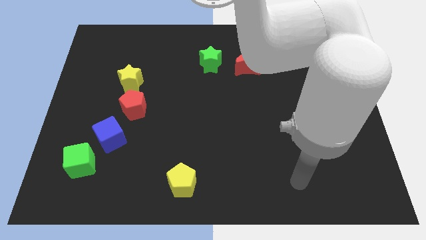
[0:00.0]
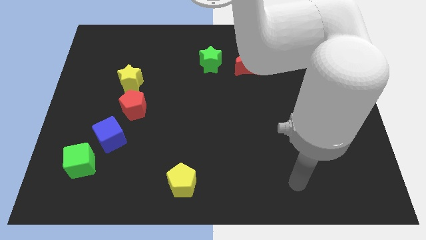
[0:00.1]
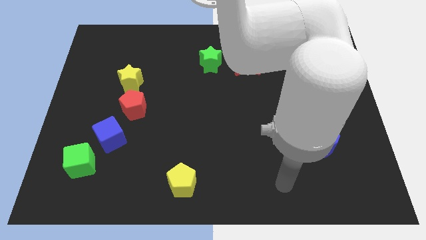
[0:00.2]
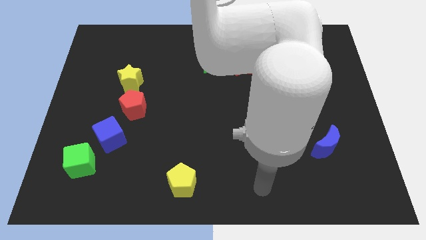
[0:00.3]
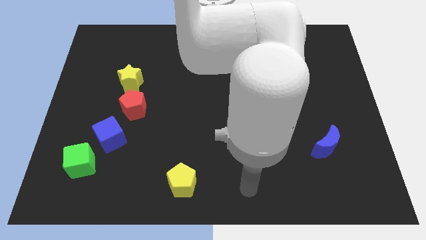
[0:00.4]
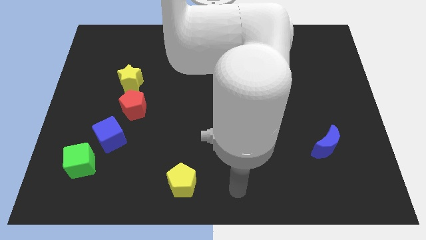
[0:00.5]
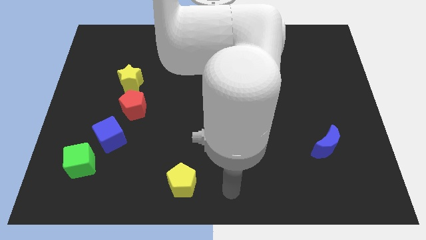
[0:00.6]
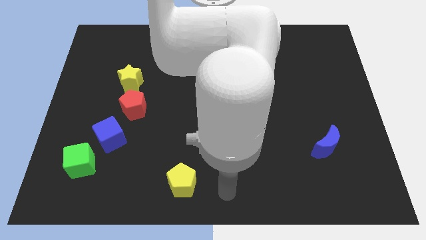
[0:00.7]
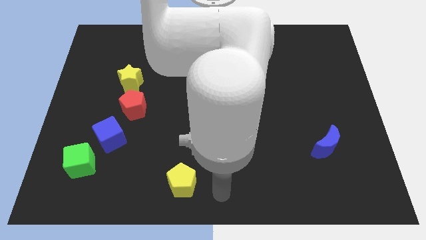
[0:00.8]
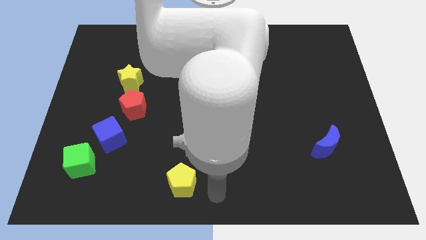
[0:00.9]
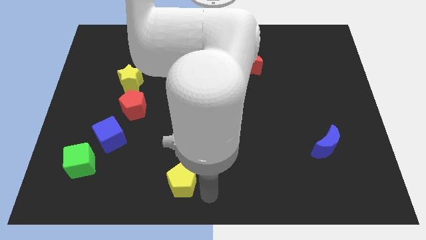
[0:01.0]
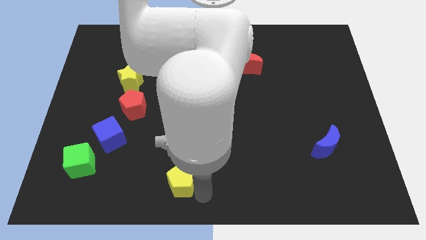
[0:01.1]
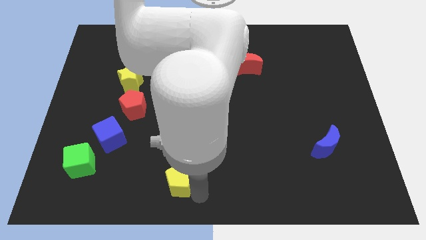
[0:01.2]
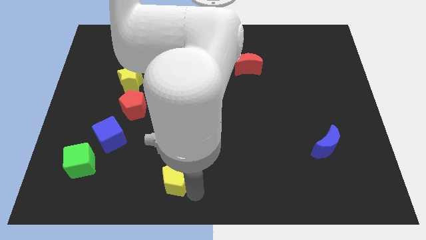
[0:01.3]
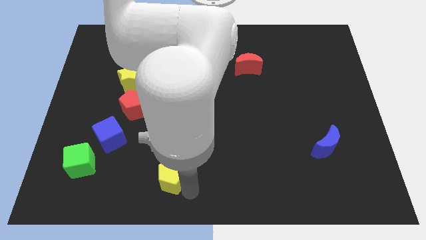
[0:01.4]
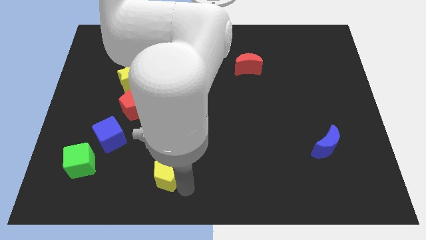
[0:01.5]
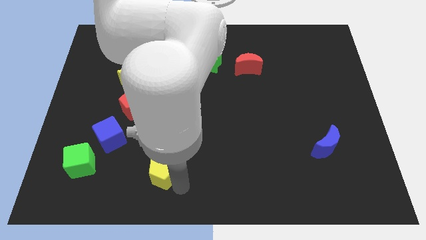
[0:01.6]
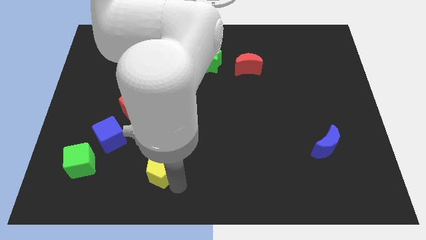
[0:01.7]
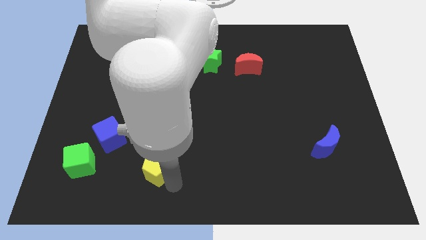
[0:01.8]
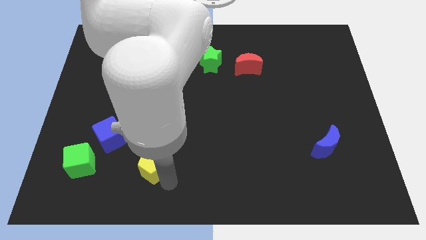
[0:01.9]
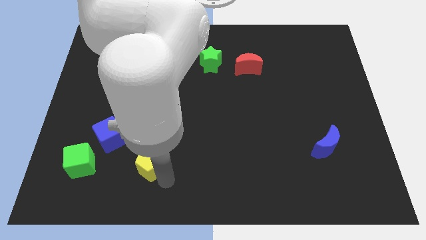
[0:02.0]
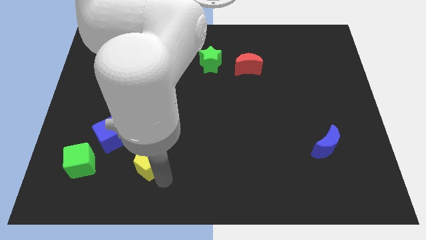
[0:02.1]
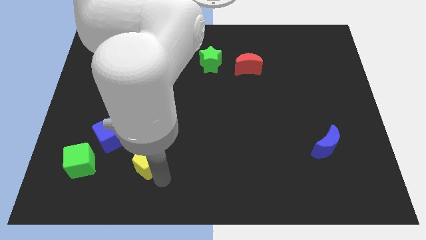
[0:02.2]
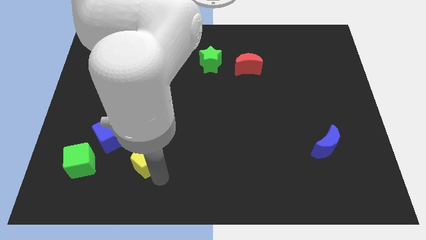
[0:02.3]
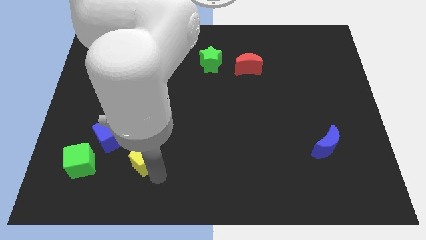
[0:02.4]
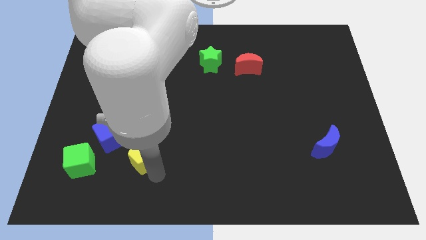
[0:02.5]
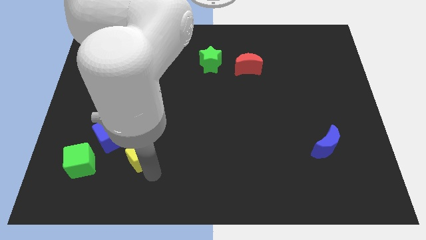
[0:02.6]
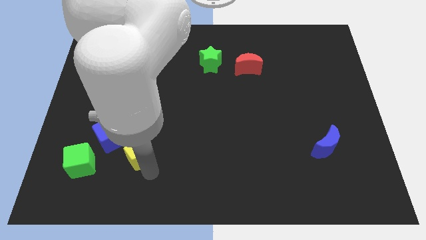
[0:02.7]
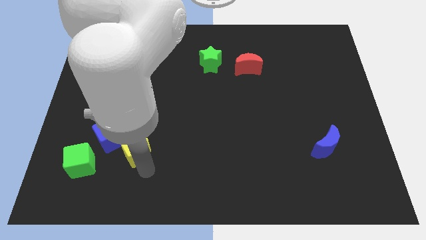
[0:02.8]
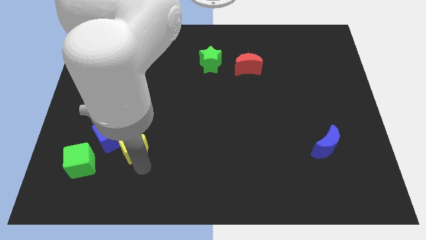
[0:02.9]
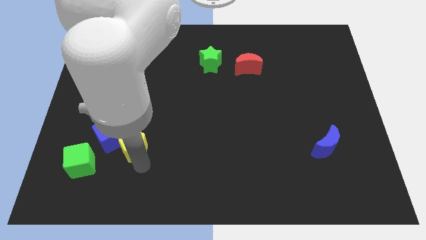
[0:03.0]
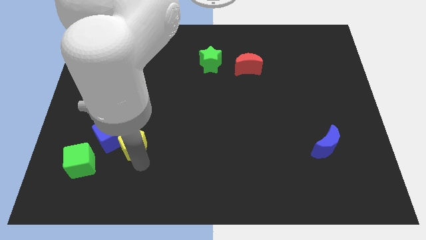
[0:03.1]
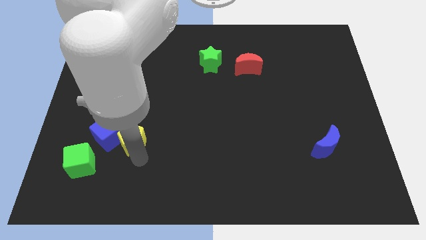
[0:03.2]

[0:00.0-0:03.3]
move the yellow pentagon close to the blue cube

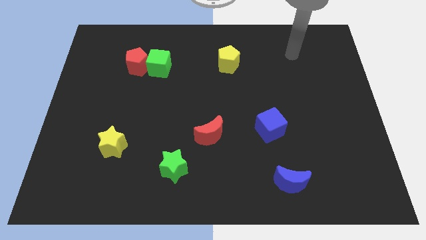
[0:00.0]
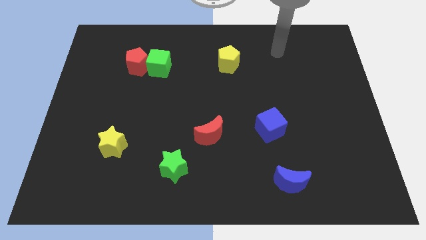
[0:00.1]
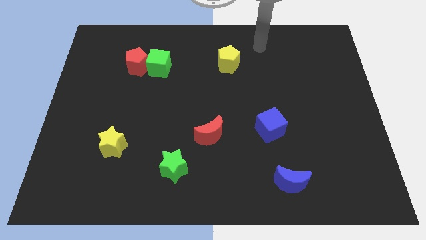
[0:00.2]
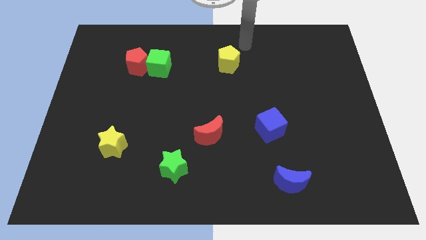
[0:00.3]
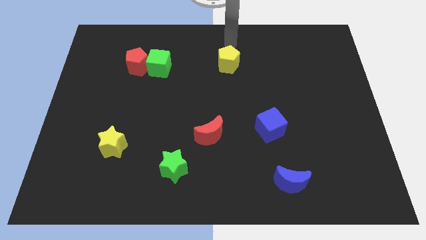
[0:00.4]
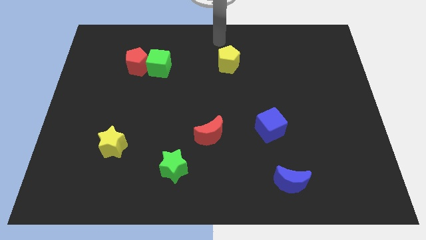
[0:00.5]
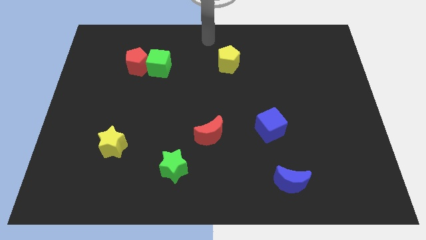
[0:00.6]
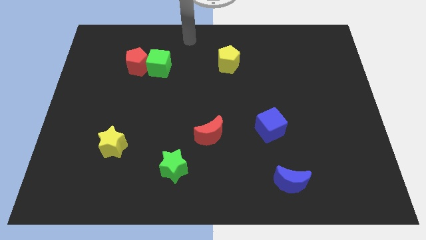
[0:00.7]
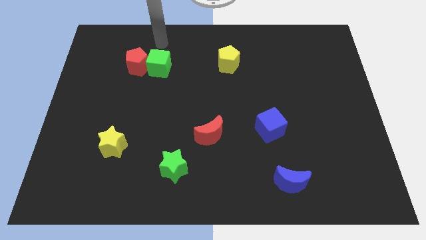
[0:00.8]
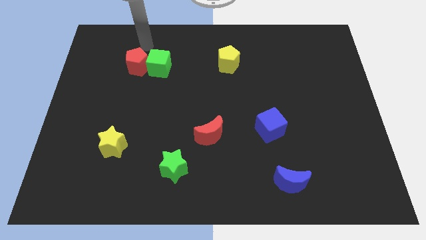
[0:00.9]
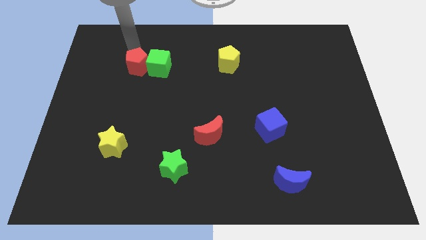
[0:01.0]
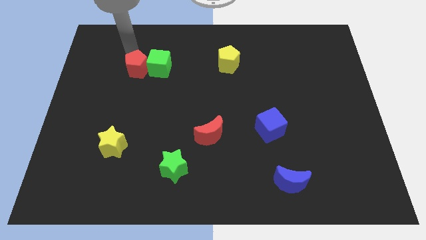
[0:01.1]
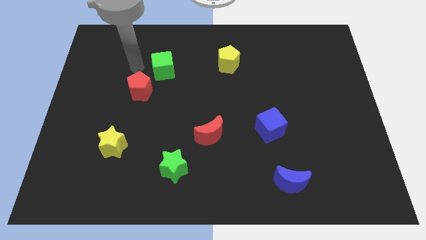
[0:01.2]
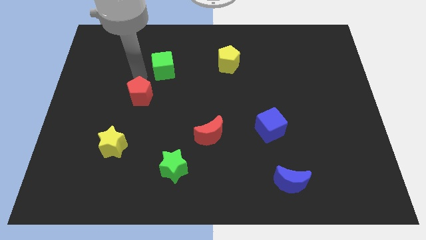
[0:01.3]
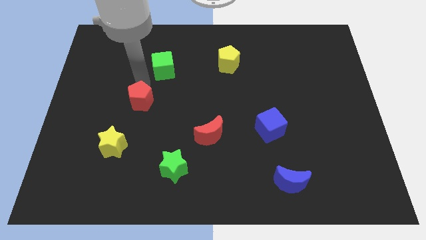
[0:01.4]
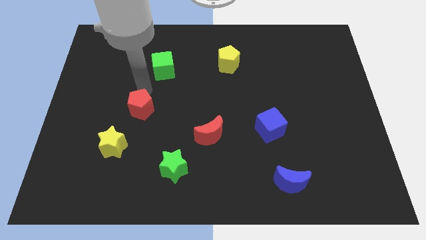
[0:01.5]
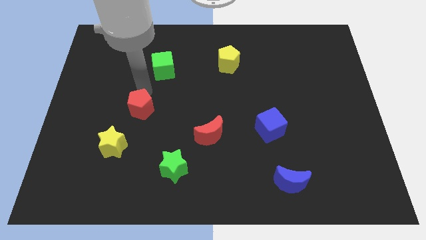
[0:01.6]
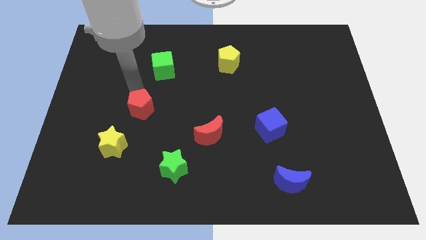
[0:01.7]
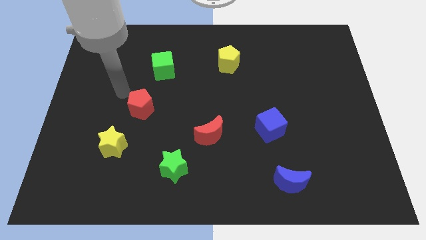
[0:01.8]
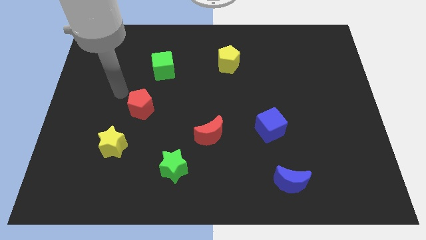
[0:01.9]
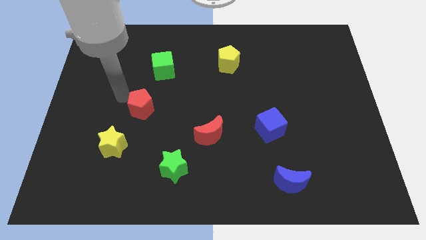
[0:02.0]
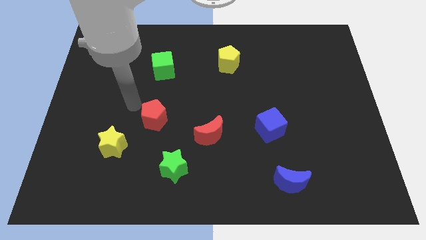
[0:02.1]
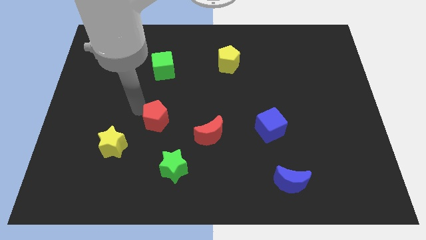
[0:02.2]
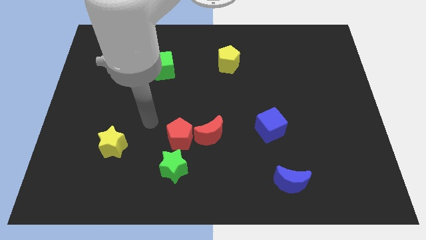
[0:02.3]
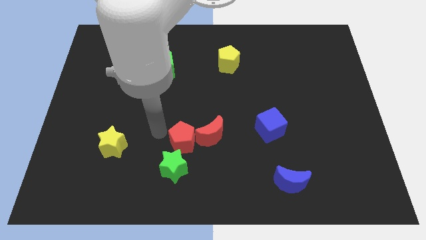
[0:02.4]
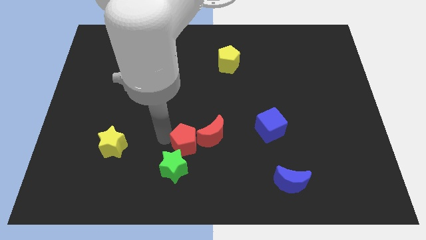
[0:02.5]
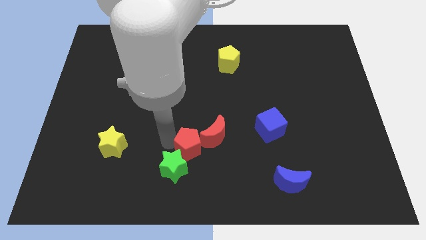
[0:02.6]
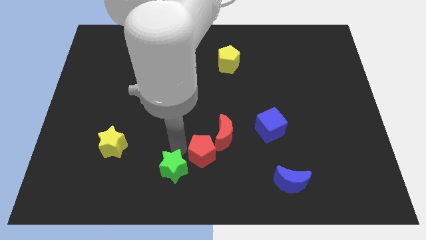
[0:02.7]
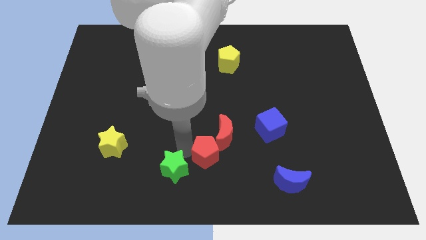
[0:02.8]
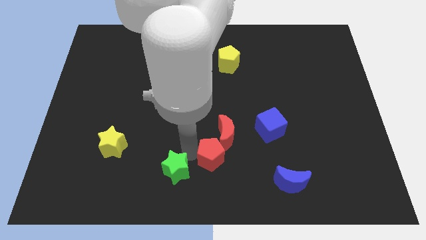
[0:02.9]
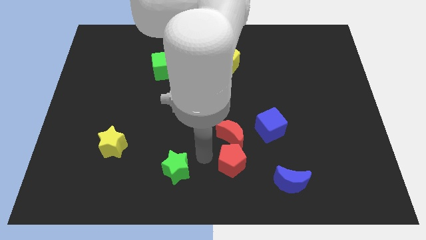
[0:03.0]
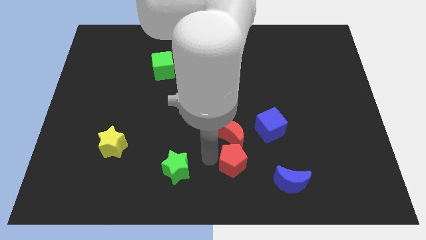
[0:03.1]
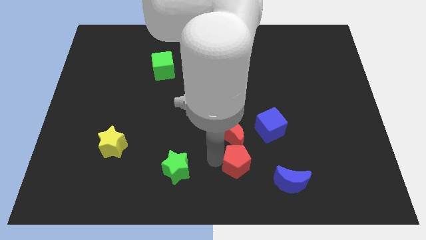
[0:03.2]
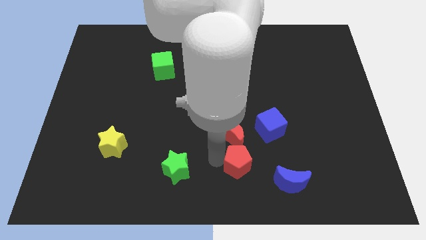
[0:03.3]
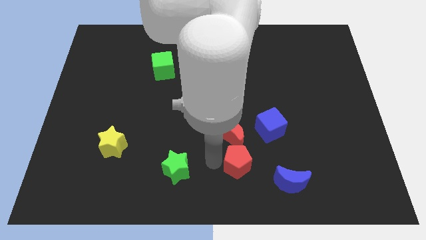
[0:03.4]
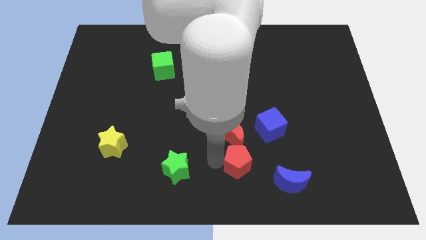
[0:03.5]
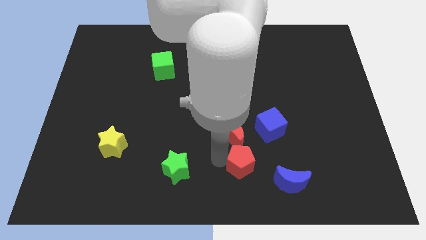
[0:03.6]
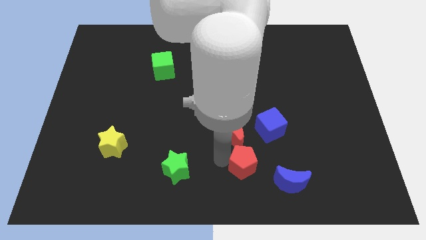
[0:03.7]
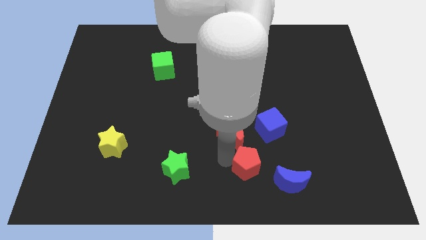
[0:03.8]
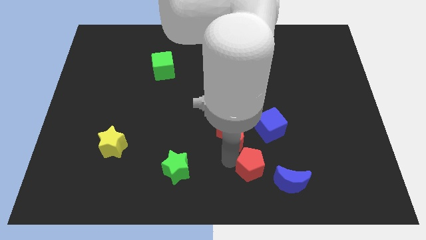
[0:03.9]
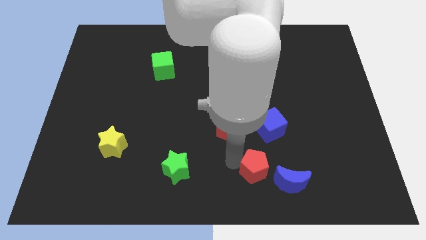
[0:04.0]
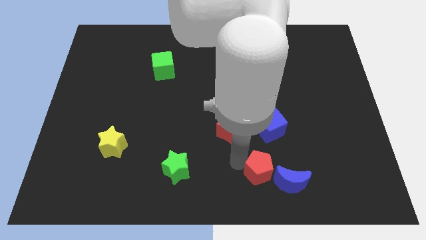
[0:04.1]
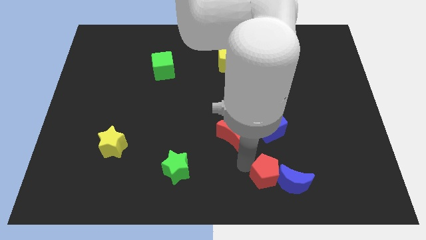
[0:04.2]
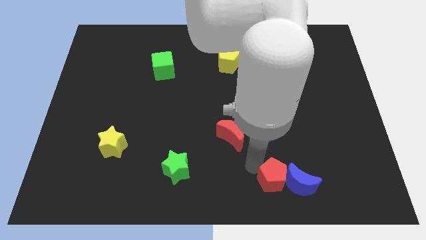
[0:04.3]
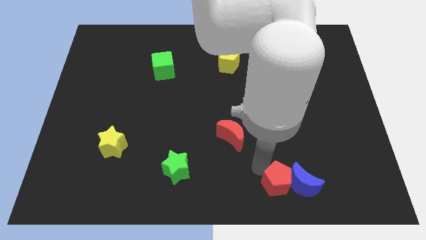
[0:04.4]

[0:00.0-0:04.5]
slide the red pentagon next to the blue moon

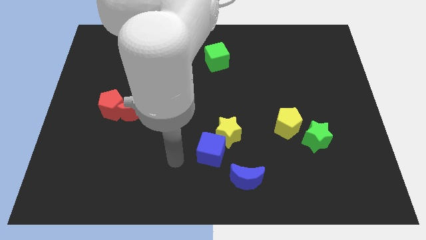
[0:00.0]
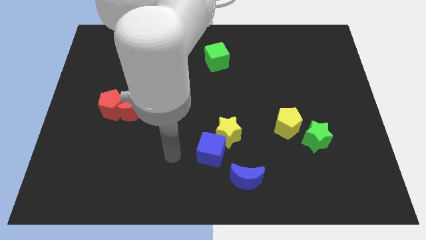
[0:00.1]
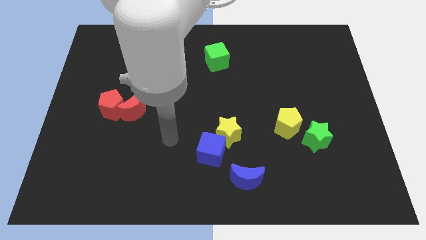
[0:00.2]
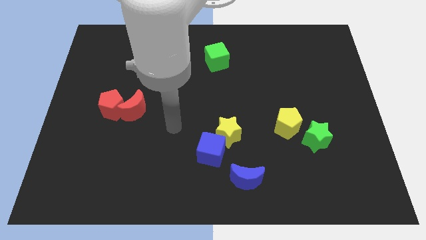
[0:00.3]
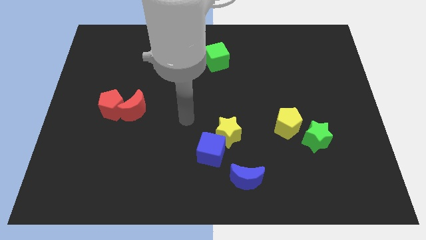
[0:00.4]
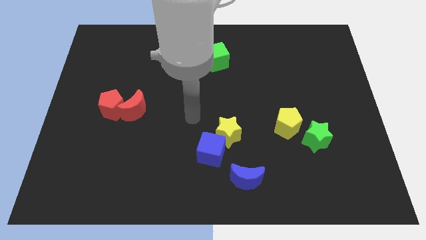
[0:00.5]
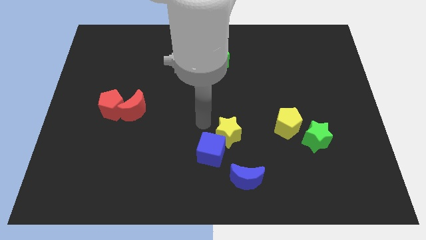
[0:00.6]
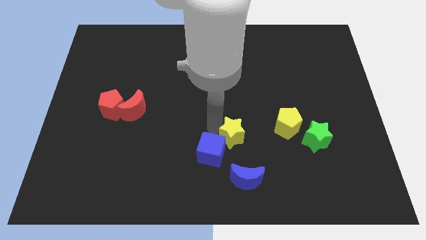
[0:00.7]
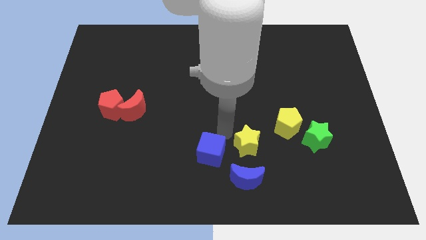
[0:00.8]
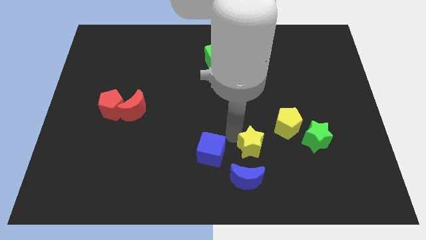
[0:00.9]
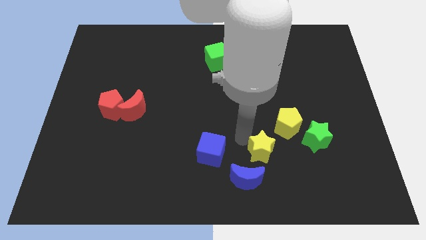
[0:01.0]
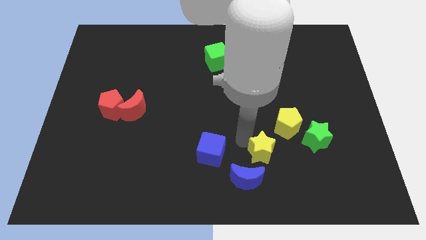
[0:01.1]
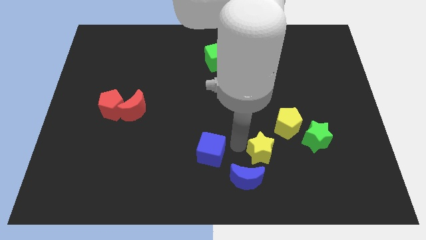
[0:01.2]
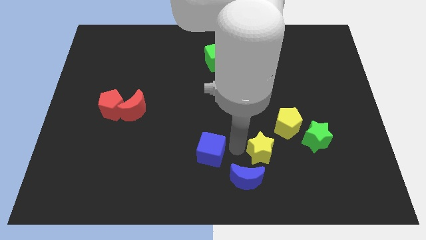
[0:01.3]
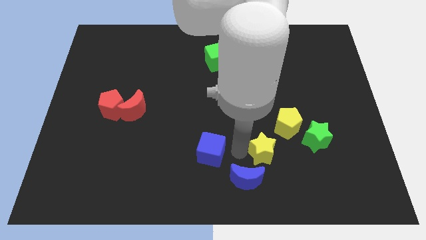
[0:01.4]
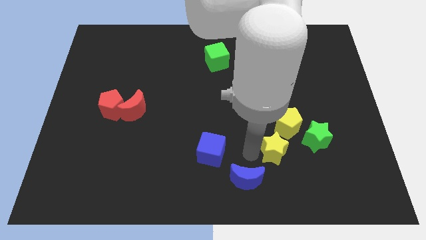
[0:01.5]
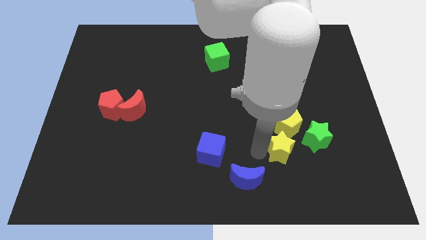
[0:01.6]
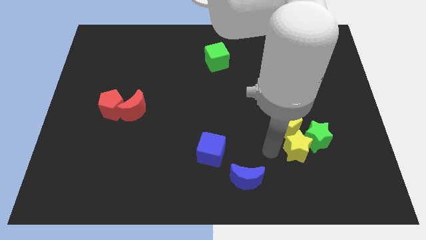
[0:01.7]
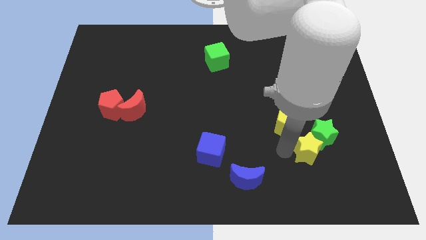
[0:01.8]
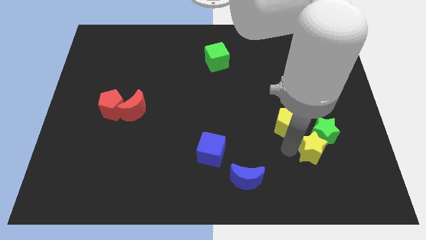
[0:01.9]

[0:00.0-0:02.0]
move the yellow star towards the green star
